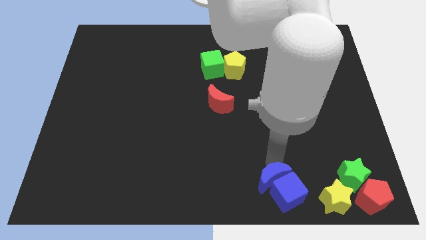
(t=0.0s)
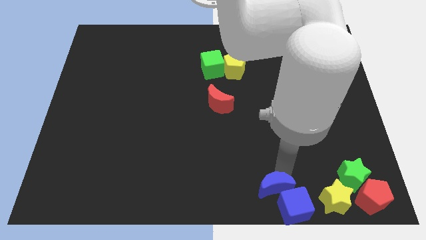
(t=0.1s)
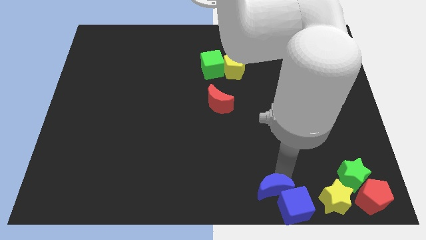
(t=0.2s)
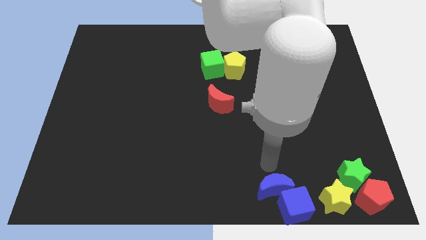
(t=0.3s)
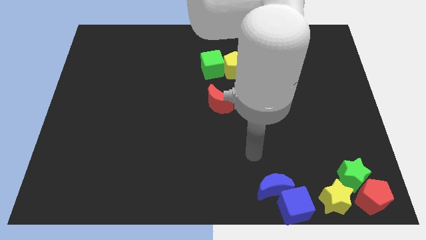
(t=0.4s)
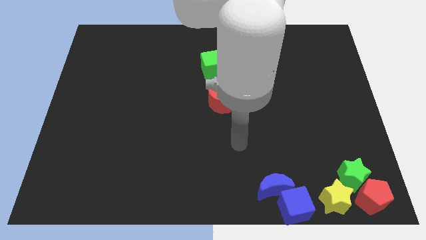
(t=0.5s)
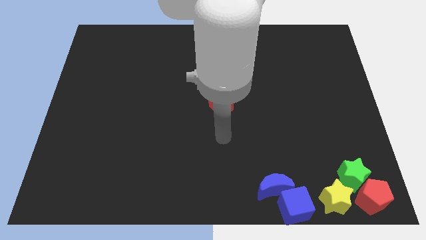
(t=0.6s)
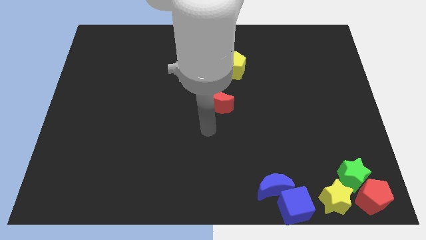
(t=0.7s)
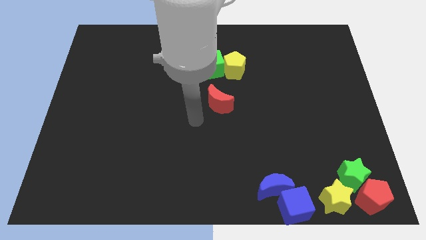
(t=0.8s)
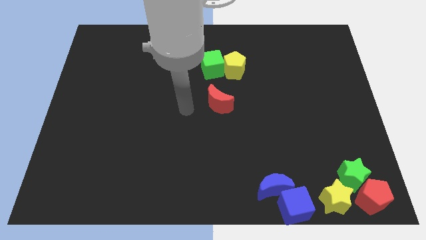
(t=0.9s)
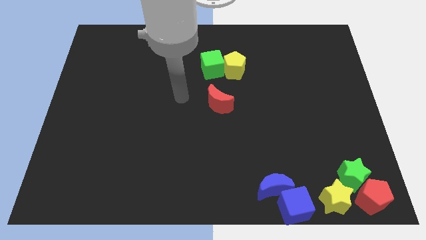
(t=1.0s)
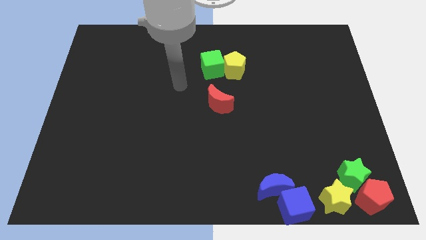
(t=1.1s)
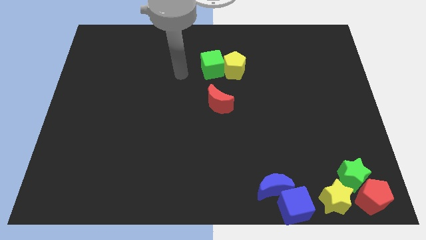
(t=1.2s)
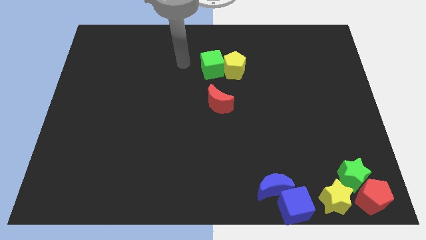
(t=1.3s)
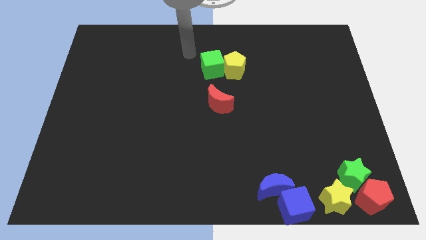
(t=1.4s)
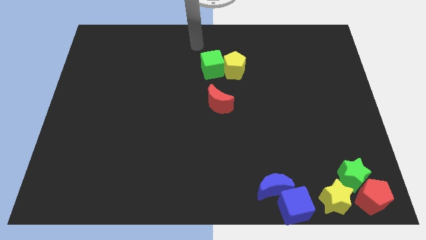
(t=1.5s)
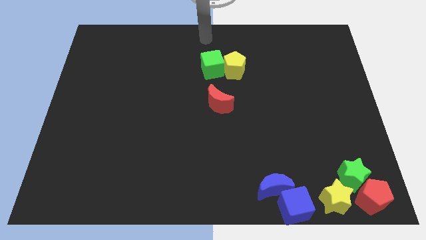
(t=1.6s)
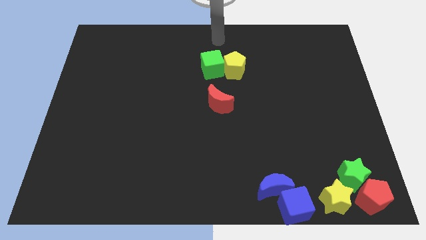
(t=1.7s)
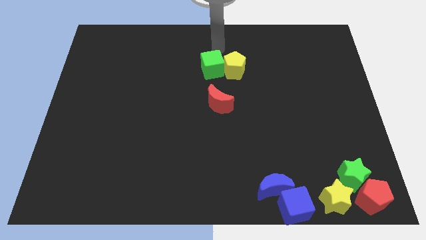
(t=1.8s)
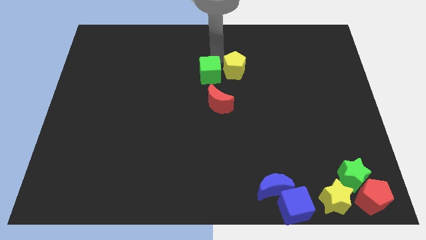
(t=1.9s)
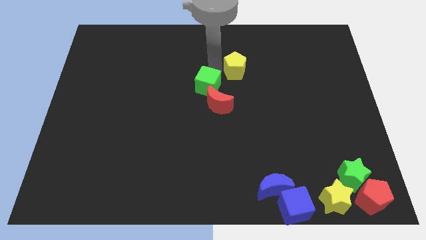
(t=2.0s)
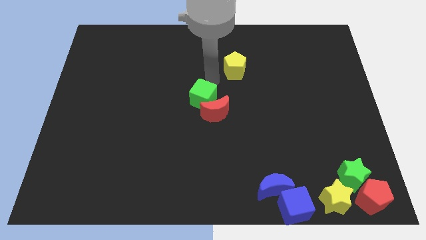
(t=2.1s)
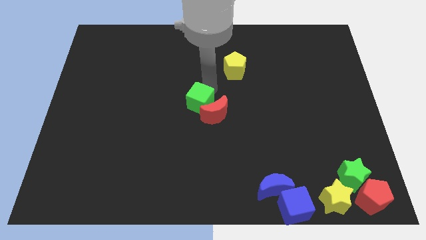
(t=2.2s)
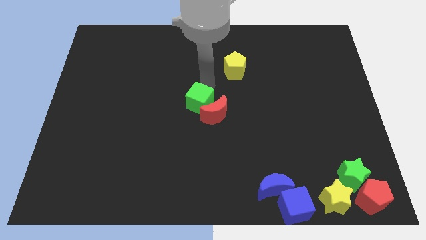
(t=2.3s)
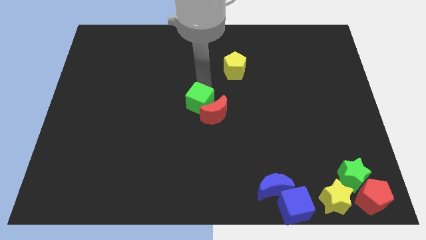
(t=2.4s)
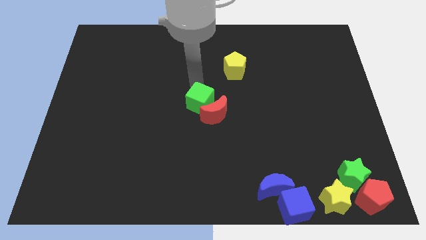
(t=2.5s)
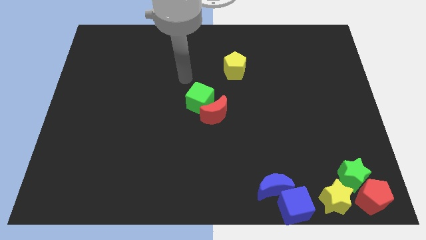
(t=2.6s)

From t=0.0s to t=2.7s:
move green cube into red moon

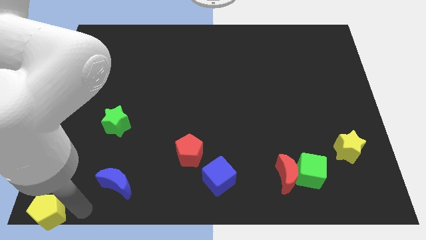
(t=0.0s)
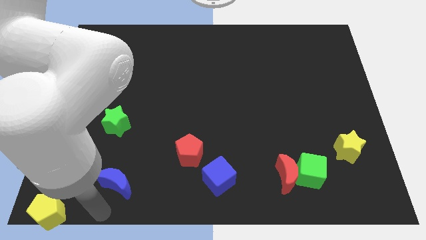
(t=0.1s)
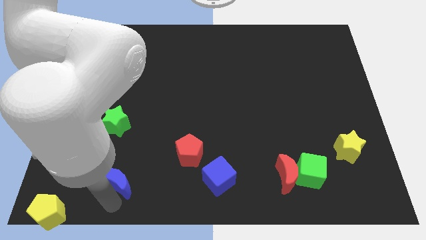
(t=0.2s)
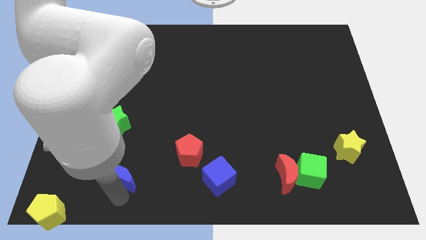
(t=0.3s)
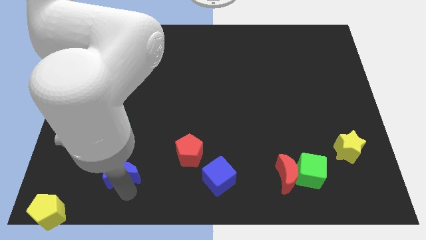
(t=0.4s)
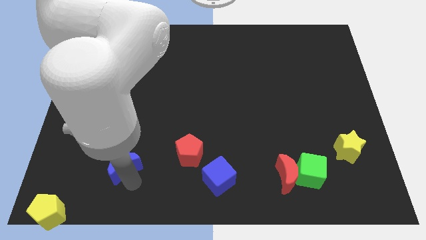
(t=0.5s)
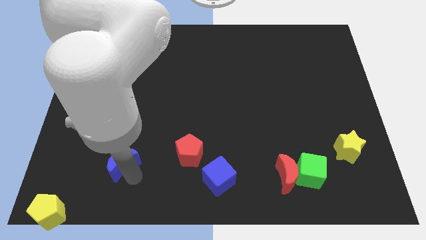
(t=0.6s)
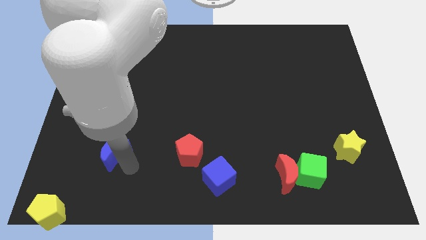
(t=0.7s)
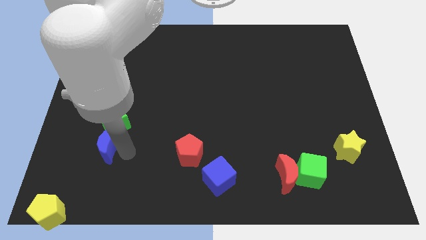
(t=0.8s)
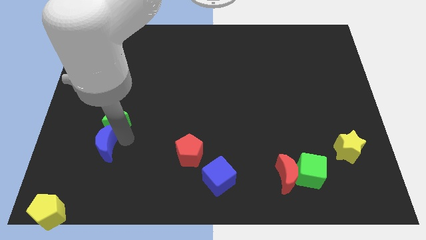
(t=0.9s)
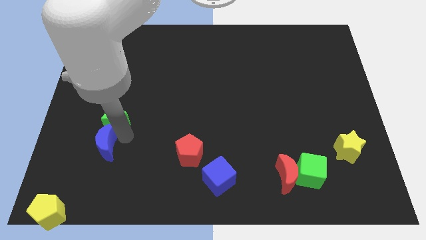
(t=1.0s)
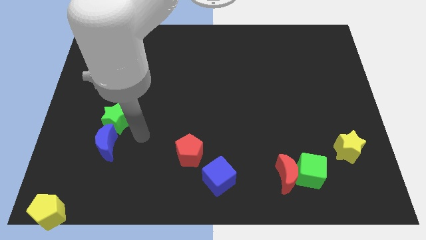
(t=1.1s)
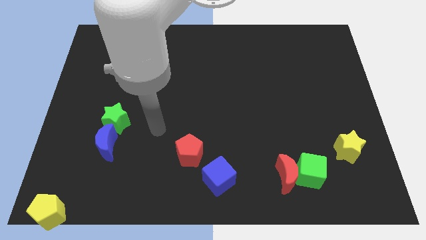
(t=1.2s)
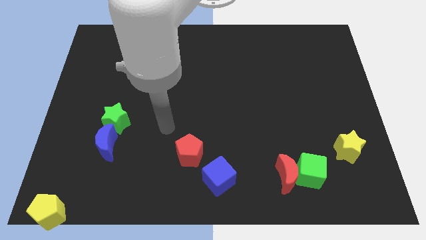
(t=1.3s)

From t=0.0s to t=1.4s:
place the blue crescent bottom to the green star

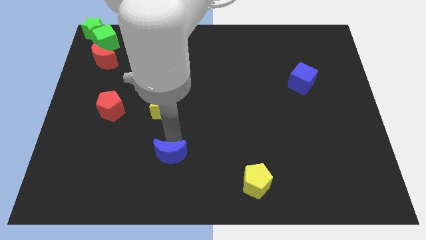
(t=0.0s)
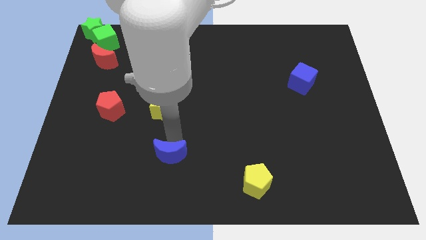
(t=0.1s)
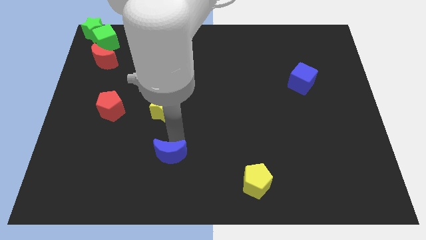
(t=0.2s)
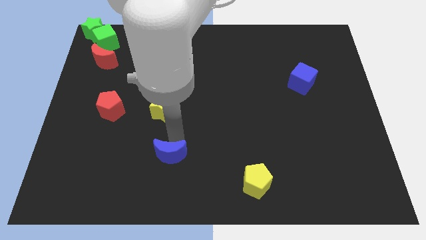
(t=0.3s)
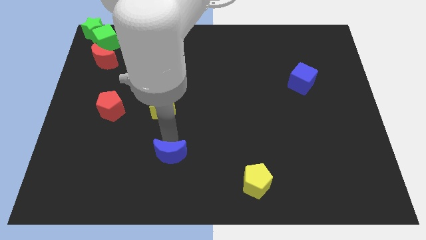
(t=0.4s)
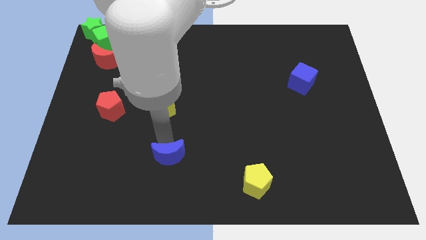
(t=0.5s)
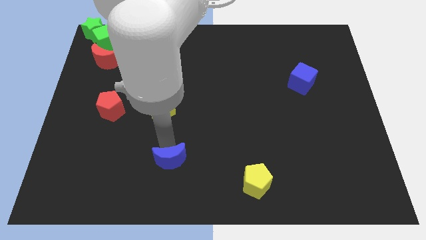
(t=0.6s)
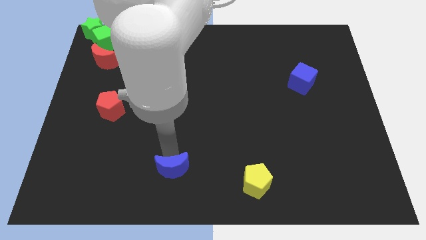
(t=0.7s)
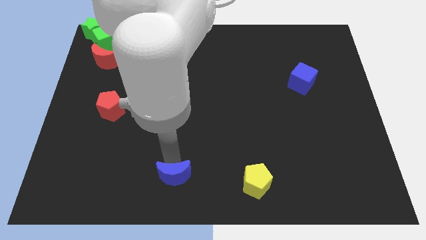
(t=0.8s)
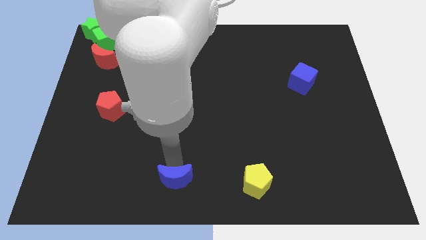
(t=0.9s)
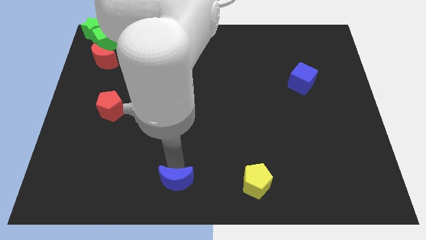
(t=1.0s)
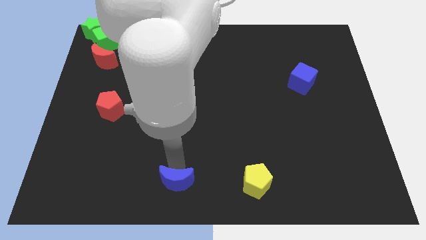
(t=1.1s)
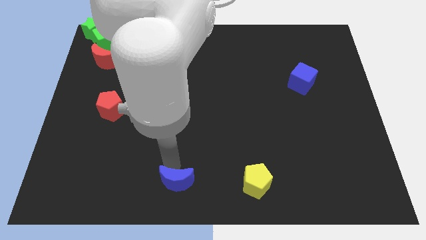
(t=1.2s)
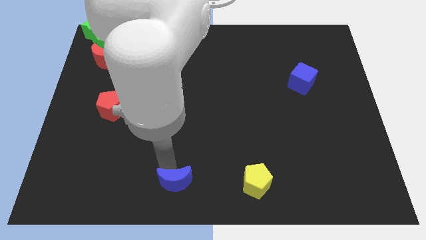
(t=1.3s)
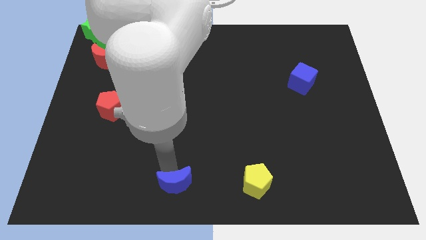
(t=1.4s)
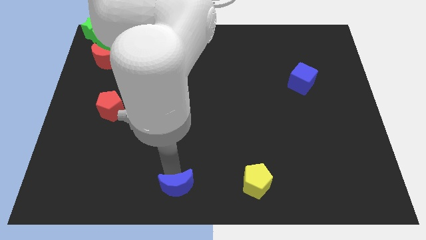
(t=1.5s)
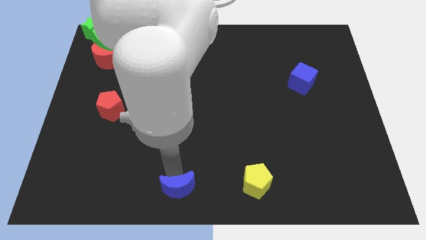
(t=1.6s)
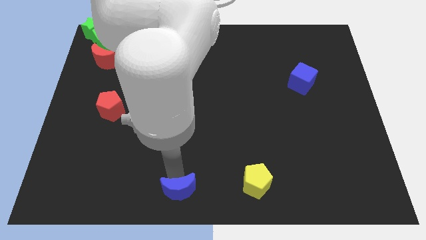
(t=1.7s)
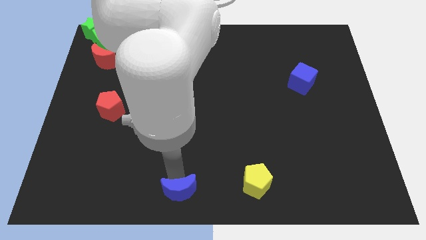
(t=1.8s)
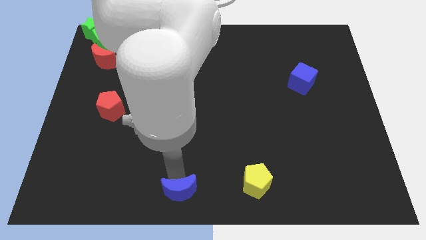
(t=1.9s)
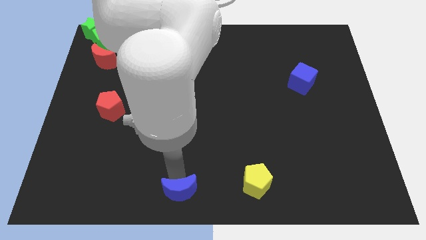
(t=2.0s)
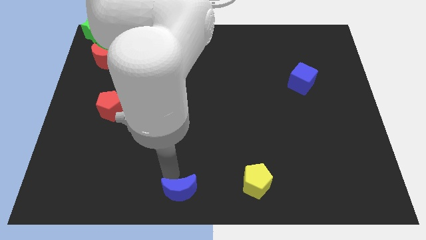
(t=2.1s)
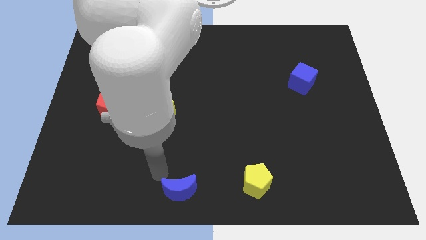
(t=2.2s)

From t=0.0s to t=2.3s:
push blue crescent to the bottom center

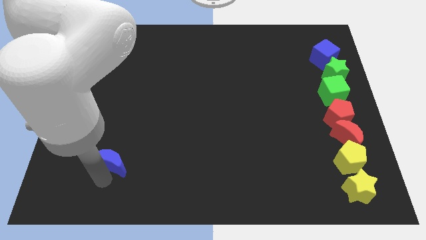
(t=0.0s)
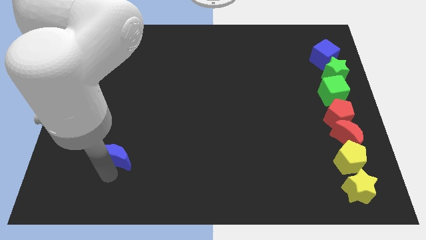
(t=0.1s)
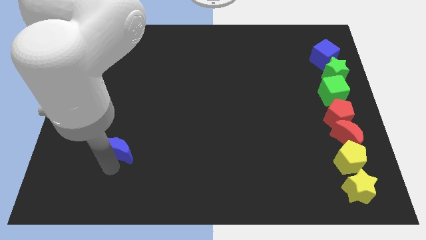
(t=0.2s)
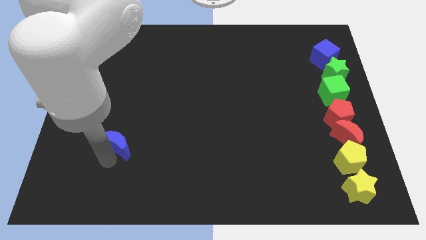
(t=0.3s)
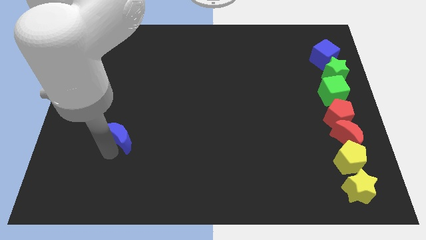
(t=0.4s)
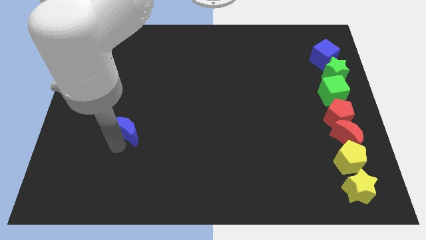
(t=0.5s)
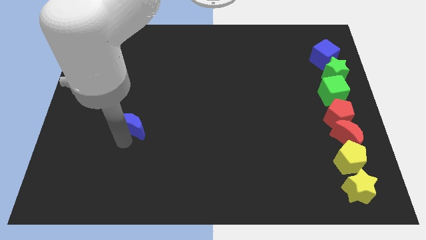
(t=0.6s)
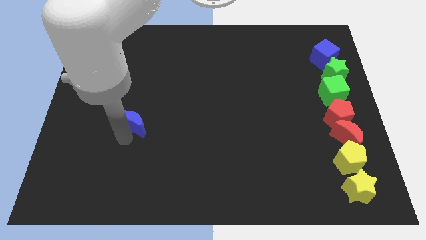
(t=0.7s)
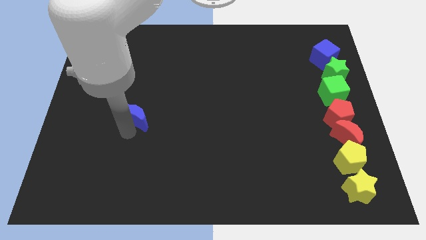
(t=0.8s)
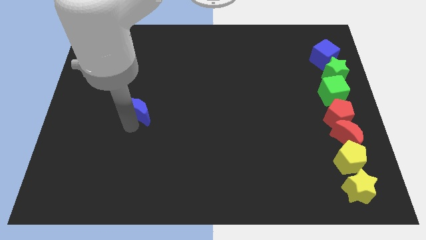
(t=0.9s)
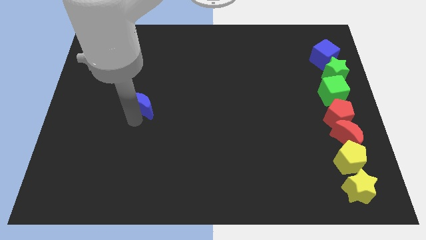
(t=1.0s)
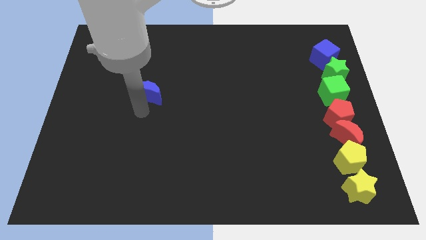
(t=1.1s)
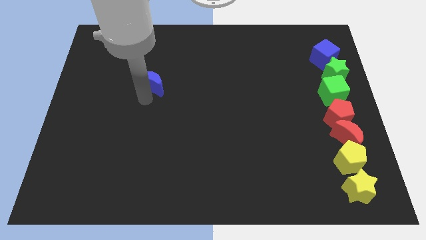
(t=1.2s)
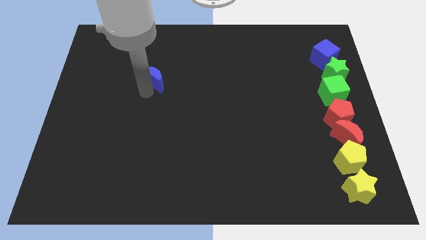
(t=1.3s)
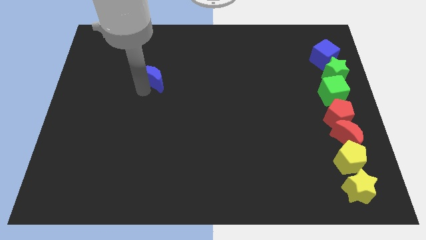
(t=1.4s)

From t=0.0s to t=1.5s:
push the blue crescent to the top of the board

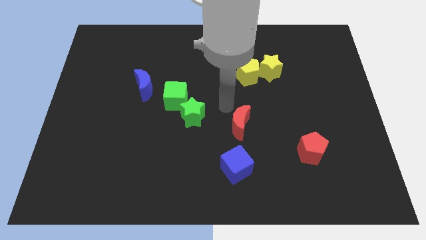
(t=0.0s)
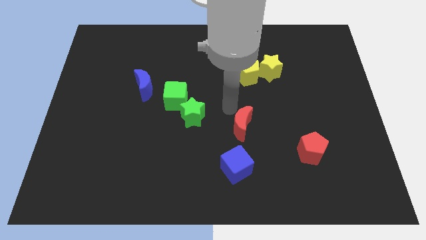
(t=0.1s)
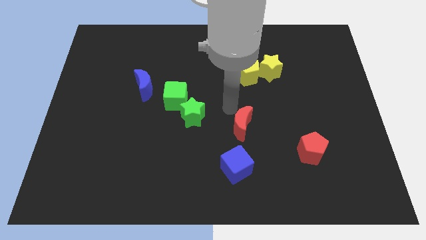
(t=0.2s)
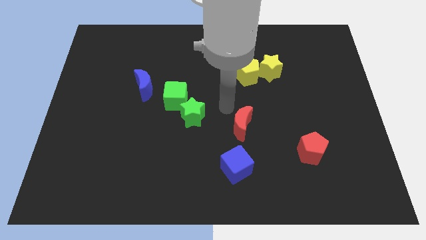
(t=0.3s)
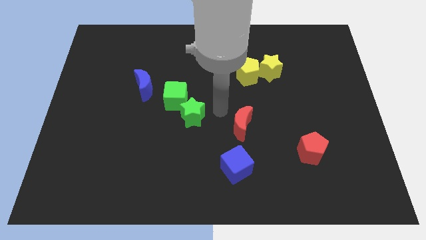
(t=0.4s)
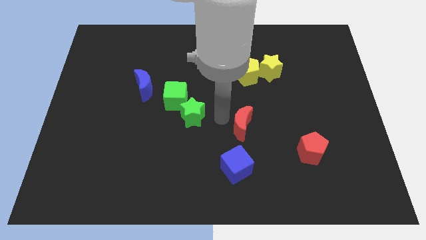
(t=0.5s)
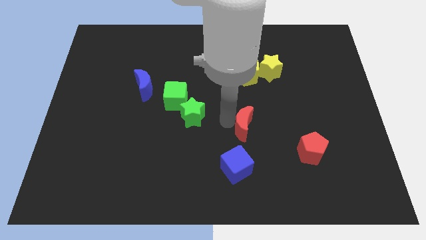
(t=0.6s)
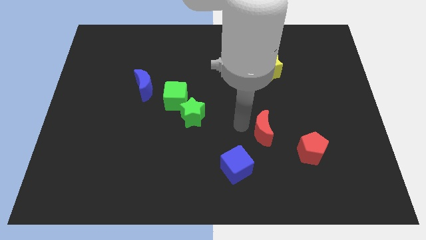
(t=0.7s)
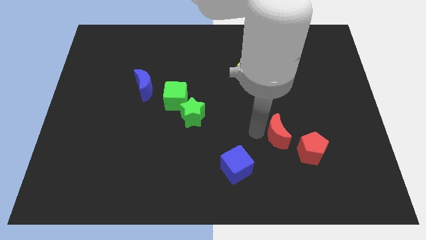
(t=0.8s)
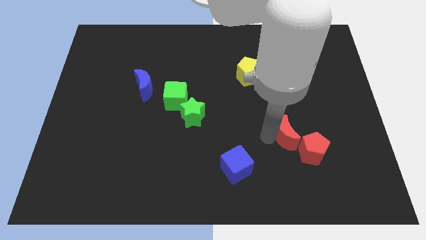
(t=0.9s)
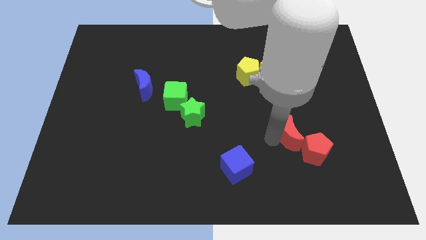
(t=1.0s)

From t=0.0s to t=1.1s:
put red blocks together
